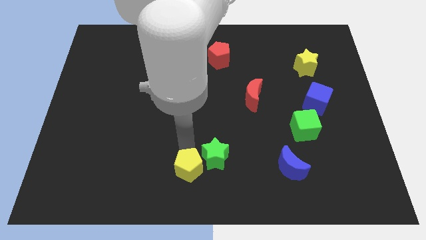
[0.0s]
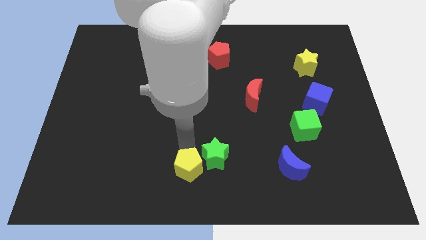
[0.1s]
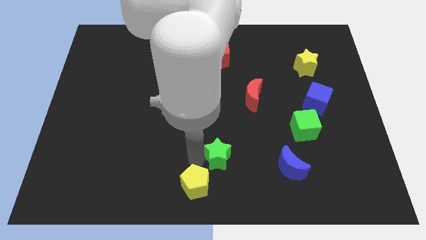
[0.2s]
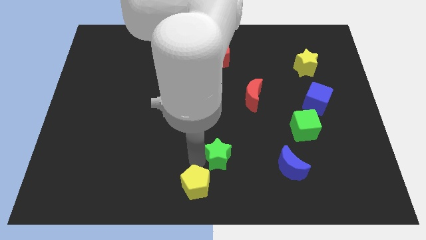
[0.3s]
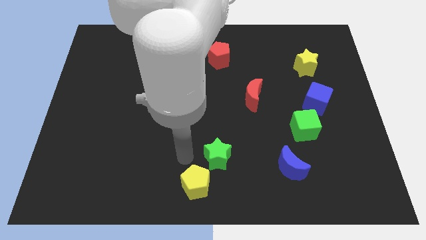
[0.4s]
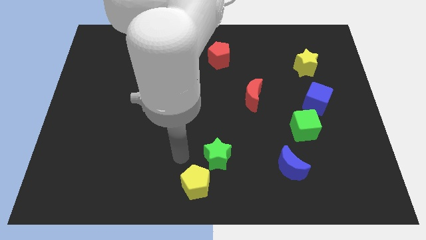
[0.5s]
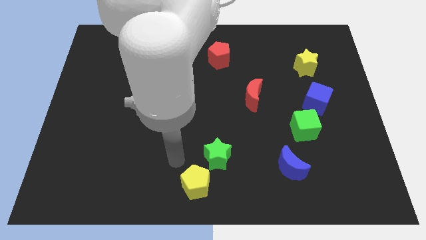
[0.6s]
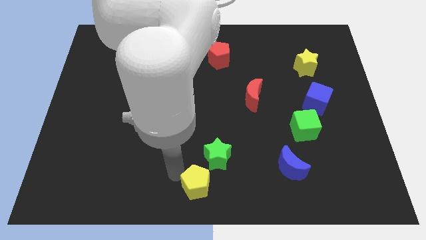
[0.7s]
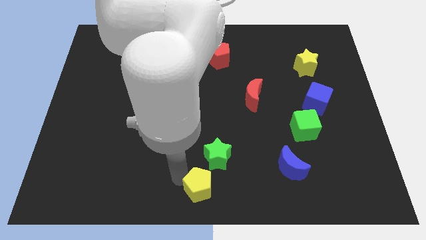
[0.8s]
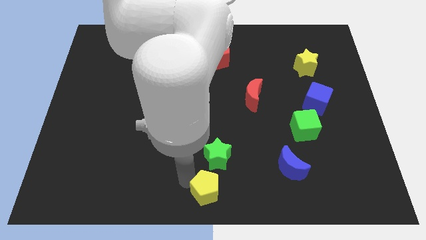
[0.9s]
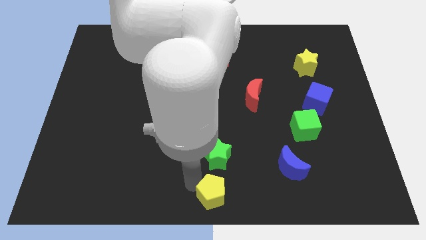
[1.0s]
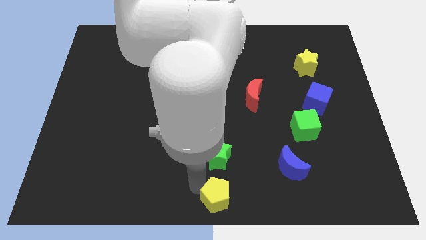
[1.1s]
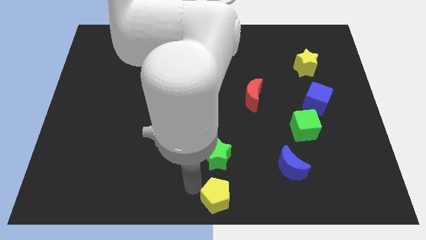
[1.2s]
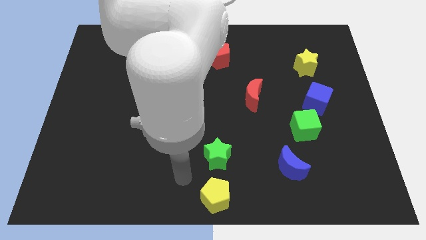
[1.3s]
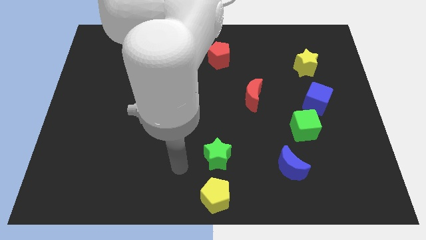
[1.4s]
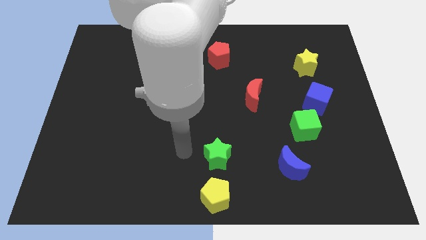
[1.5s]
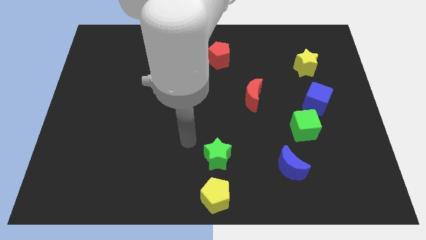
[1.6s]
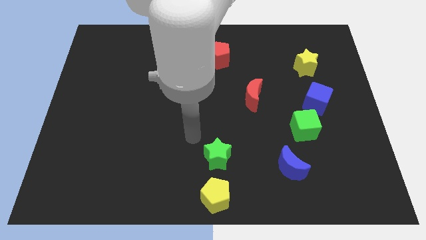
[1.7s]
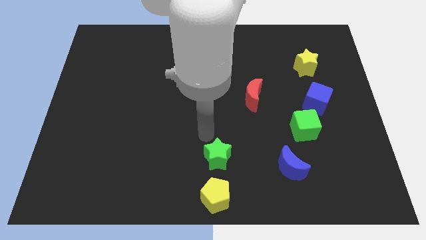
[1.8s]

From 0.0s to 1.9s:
push the yellow pentagon towards the bottom center of the board

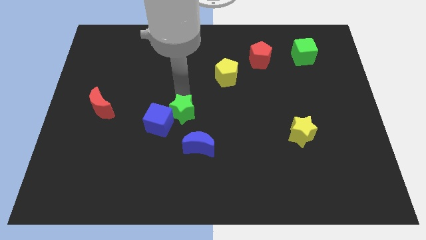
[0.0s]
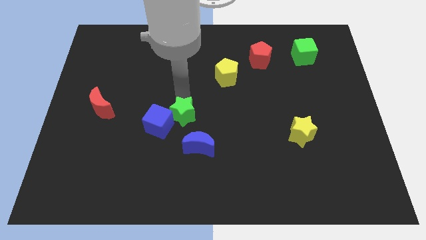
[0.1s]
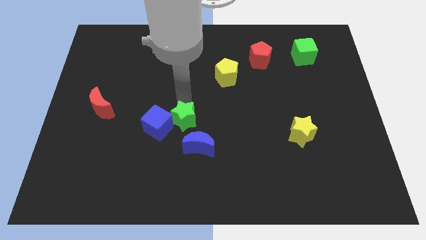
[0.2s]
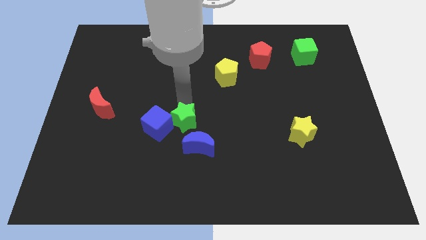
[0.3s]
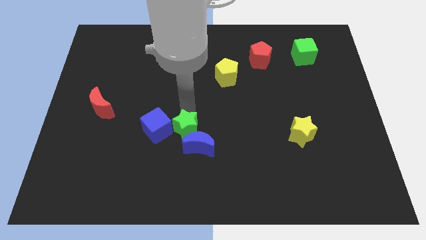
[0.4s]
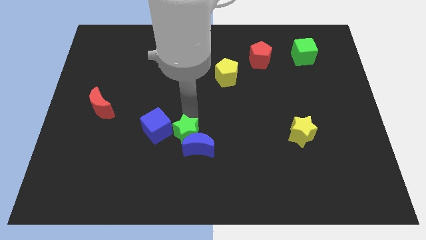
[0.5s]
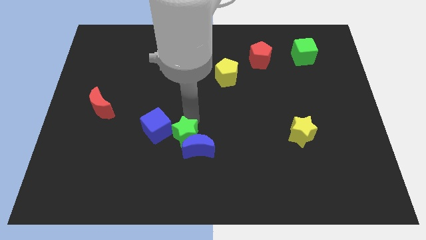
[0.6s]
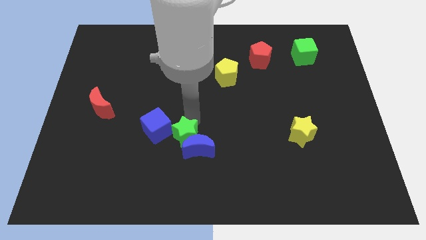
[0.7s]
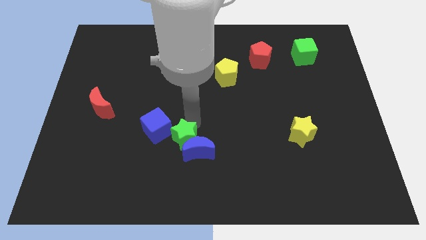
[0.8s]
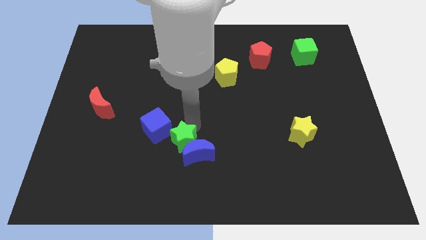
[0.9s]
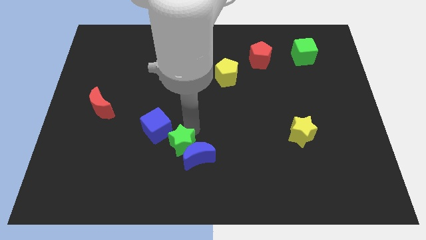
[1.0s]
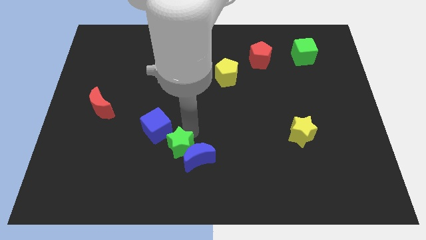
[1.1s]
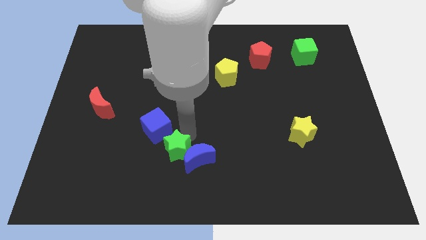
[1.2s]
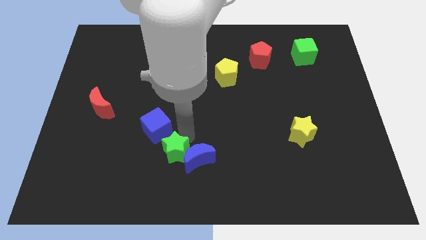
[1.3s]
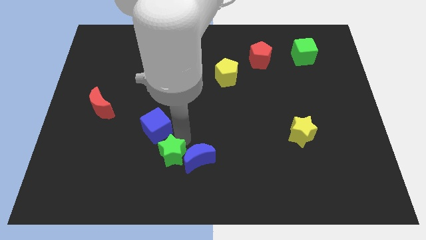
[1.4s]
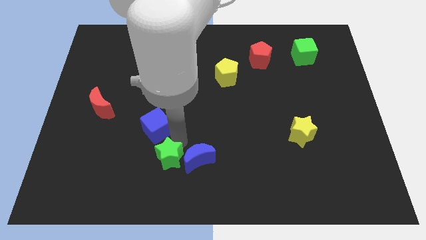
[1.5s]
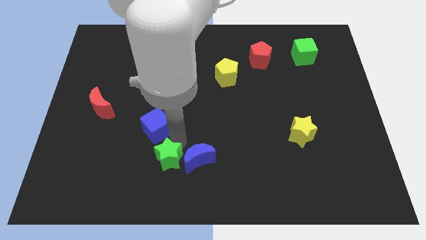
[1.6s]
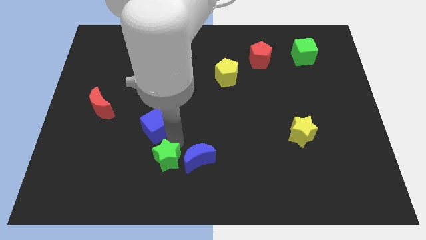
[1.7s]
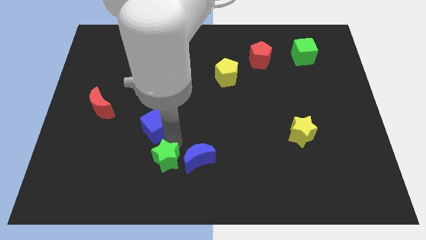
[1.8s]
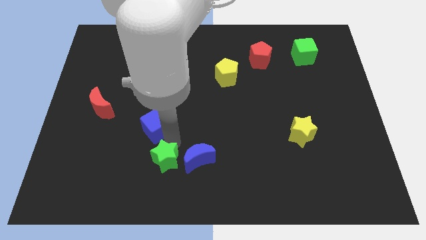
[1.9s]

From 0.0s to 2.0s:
place the green star below to the blue cube

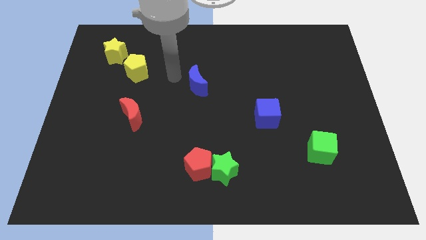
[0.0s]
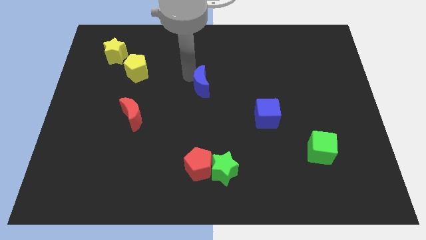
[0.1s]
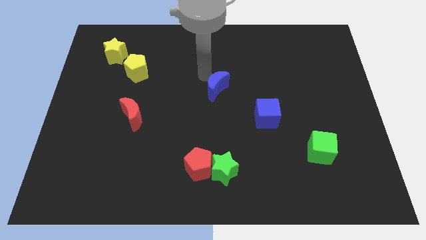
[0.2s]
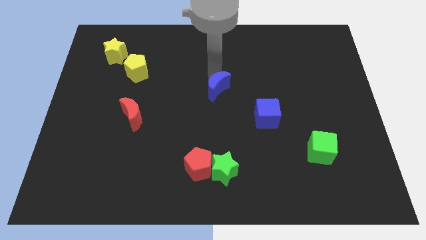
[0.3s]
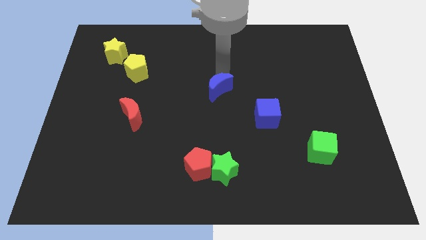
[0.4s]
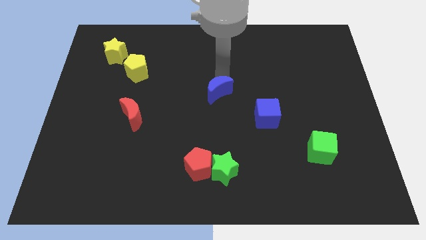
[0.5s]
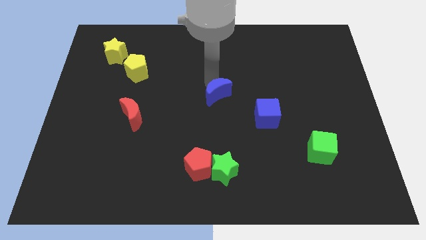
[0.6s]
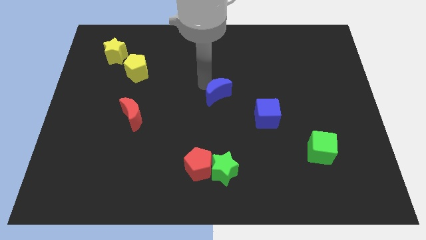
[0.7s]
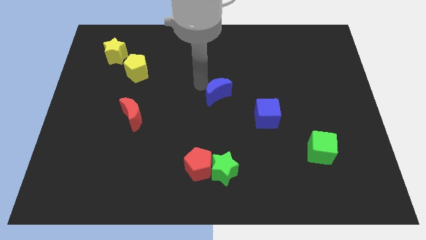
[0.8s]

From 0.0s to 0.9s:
move the blue crescent to the center of the board

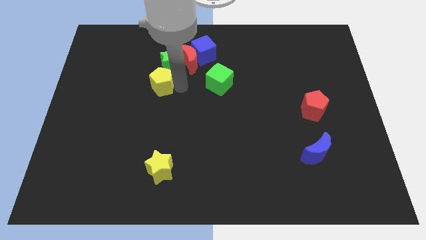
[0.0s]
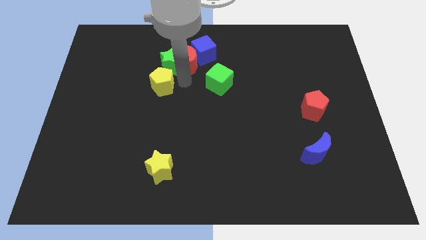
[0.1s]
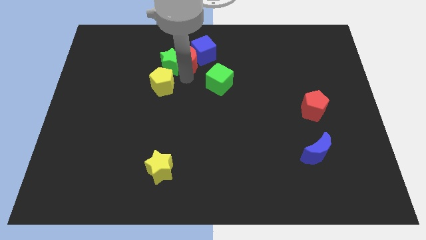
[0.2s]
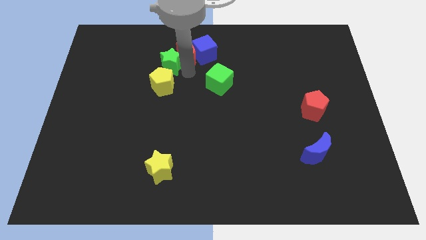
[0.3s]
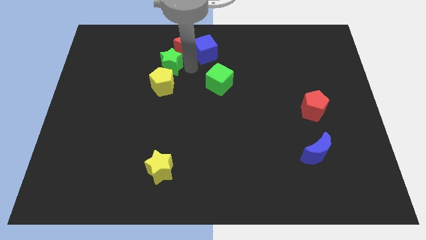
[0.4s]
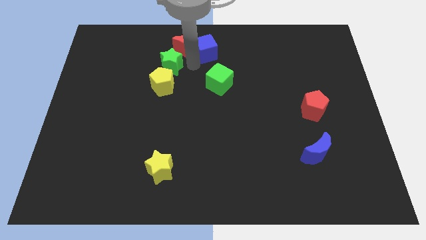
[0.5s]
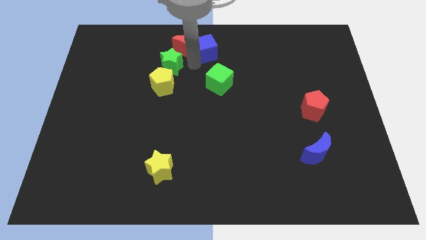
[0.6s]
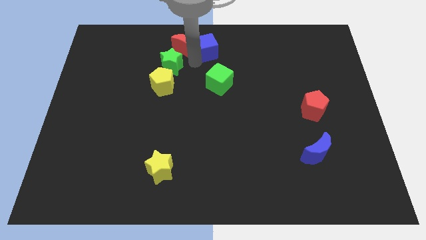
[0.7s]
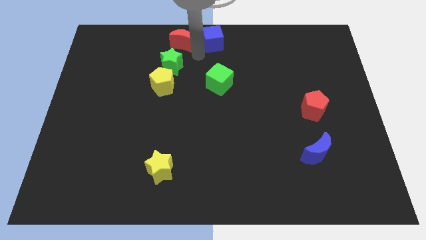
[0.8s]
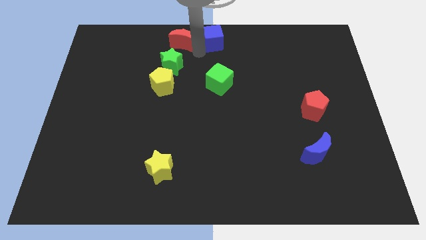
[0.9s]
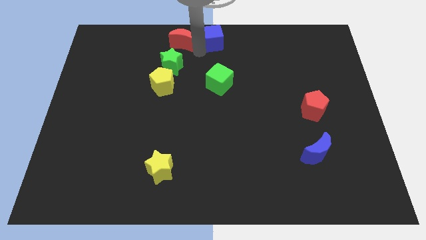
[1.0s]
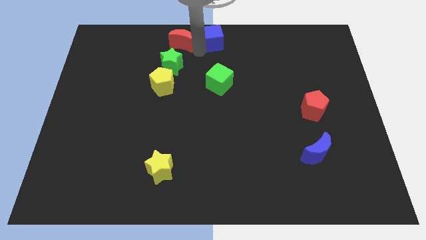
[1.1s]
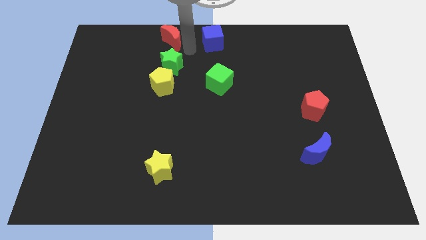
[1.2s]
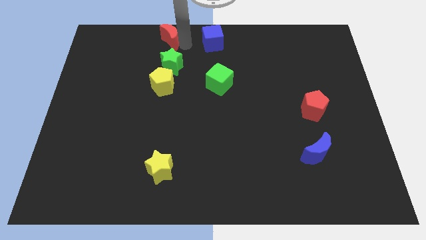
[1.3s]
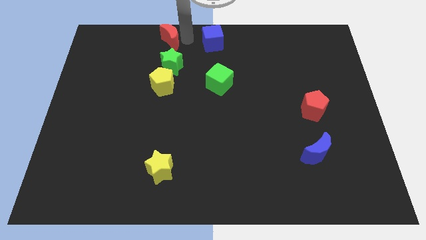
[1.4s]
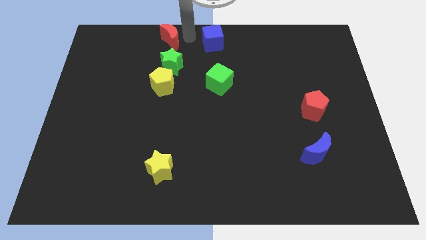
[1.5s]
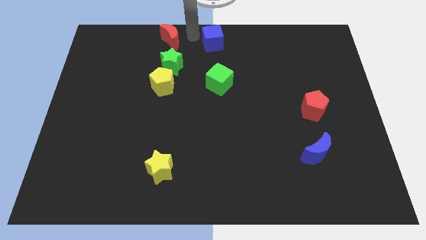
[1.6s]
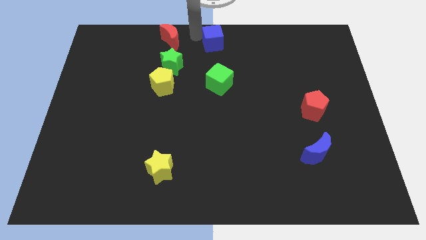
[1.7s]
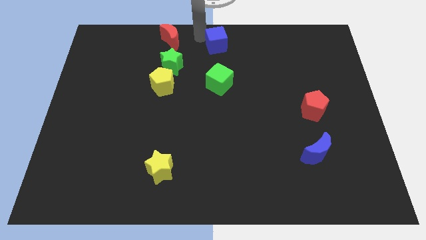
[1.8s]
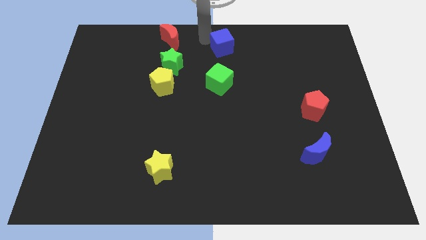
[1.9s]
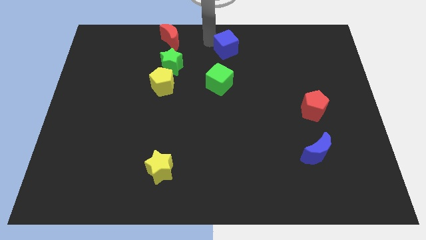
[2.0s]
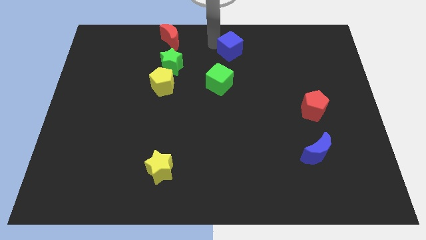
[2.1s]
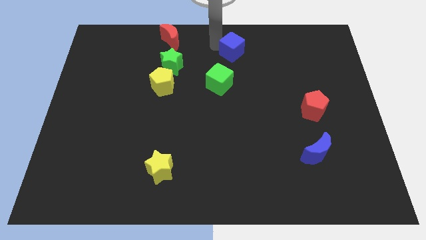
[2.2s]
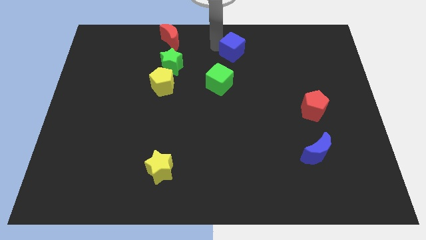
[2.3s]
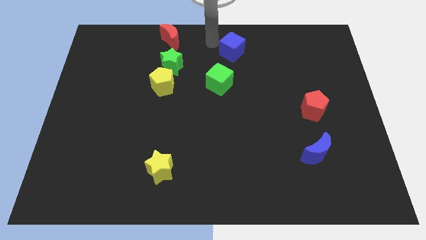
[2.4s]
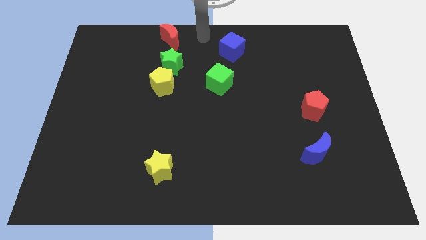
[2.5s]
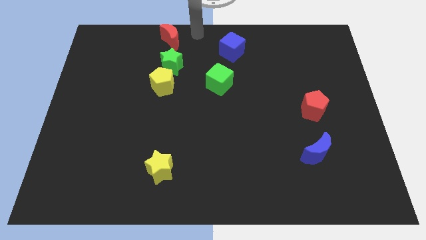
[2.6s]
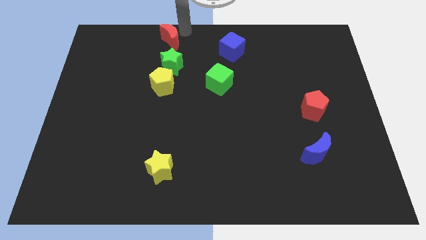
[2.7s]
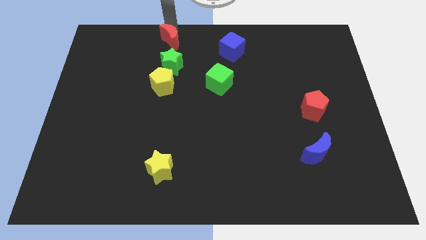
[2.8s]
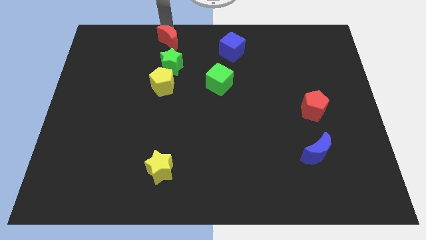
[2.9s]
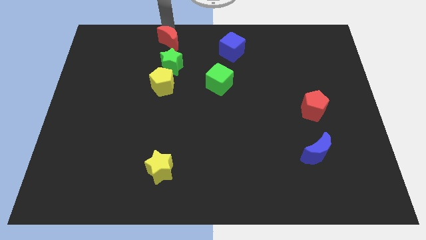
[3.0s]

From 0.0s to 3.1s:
seprate the blue cube and red moon top of the middle board

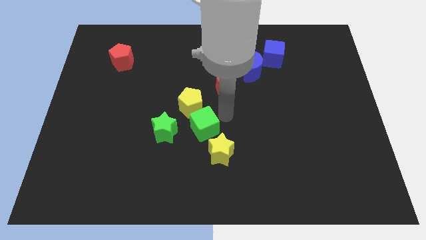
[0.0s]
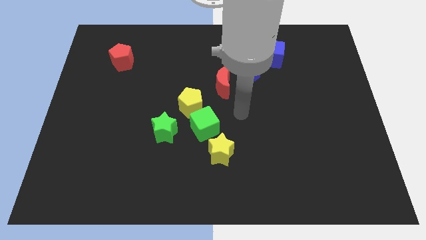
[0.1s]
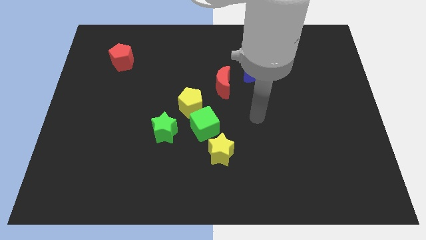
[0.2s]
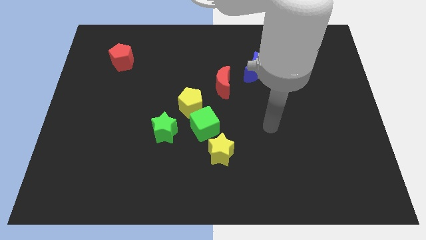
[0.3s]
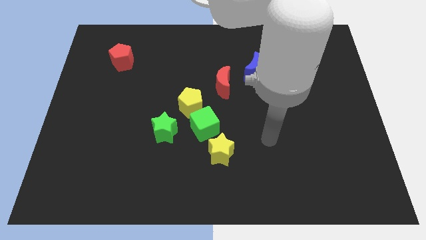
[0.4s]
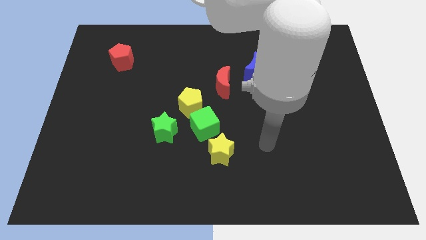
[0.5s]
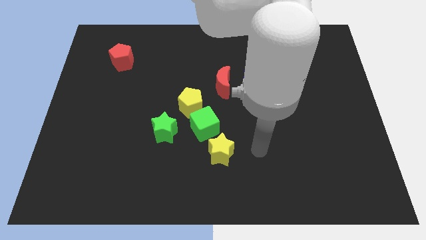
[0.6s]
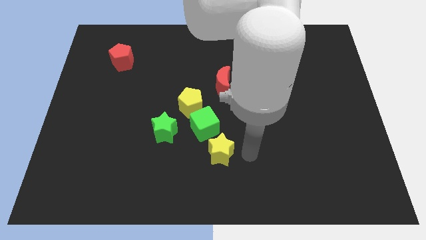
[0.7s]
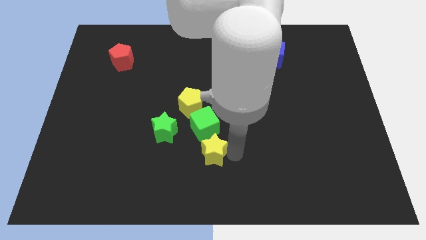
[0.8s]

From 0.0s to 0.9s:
tap the right side of the yellow star

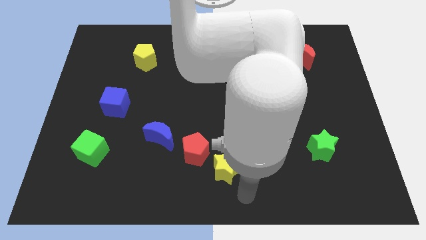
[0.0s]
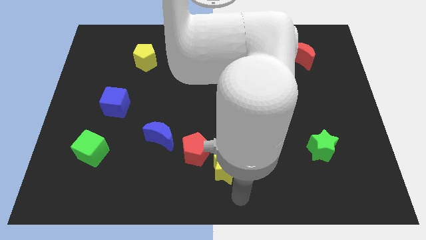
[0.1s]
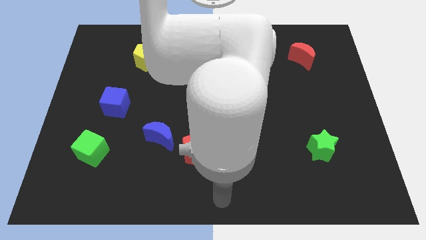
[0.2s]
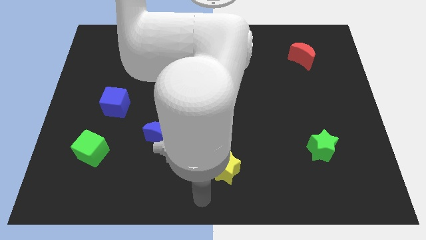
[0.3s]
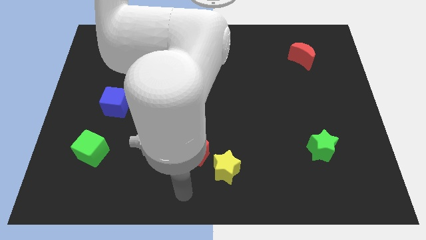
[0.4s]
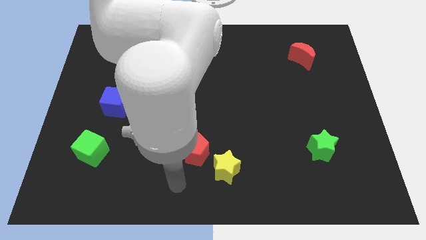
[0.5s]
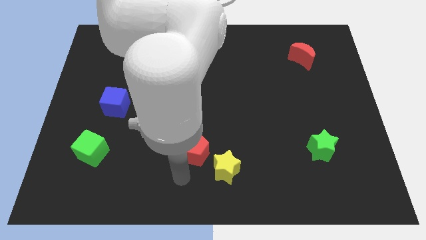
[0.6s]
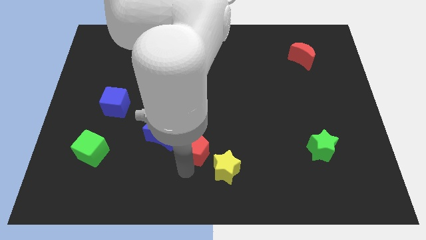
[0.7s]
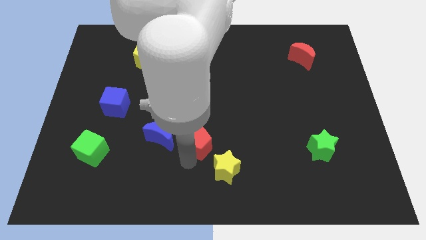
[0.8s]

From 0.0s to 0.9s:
touch the bottom of red pentagon
